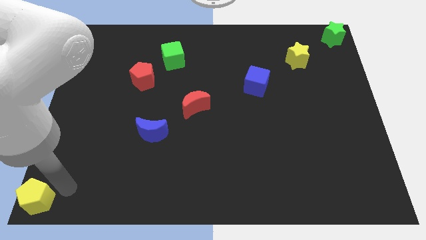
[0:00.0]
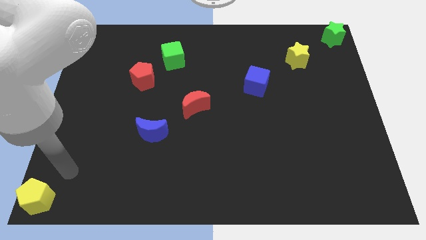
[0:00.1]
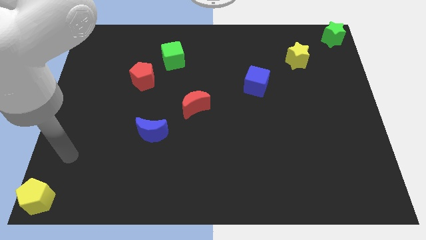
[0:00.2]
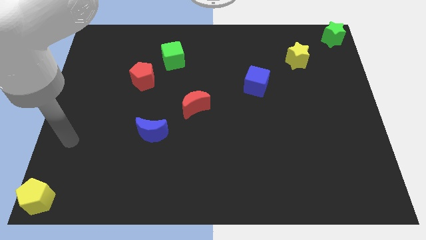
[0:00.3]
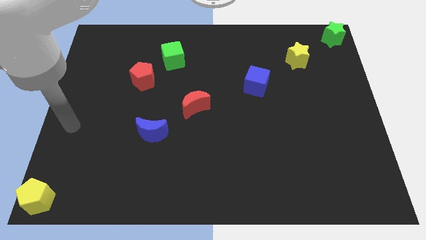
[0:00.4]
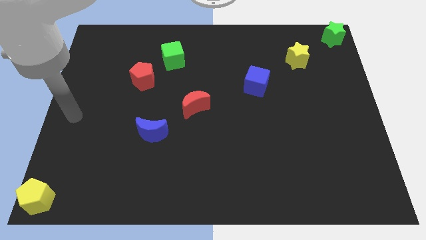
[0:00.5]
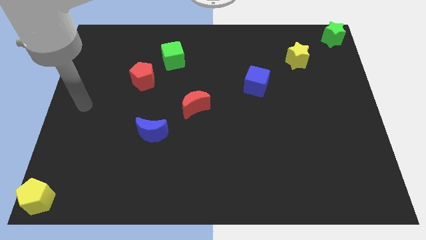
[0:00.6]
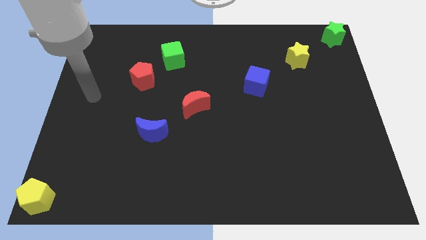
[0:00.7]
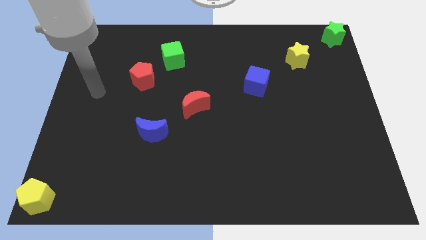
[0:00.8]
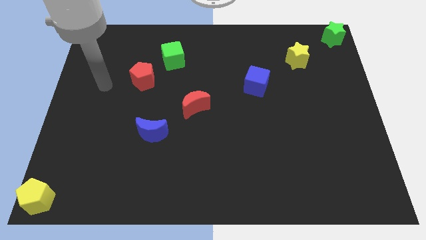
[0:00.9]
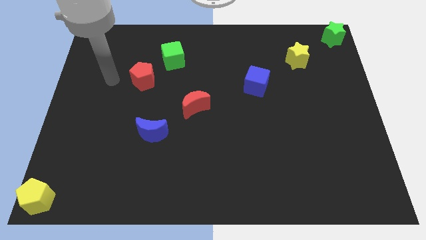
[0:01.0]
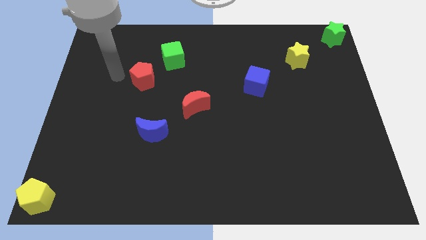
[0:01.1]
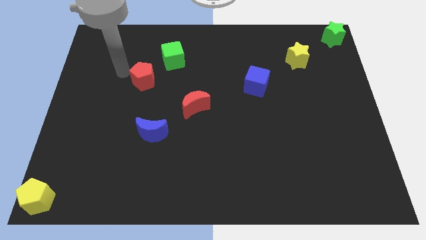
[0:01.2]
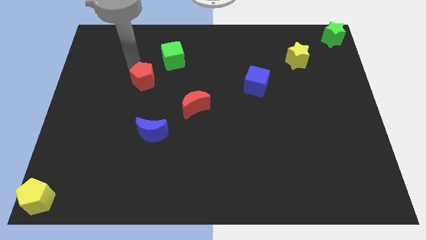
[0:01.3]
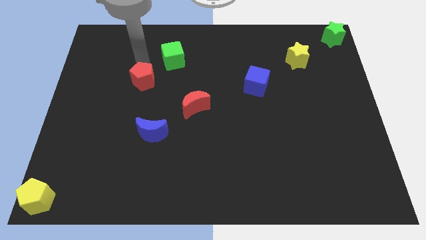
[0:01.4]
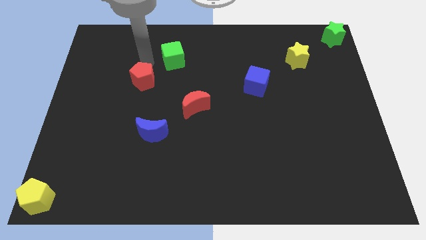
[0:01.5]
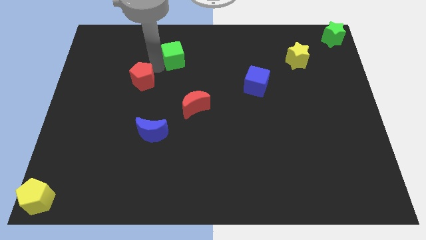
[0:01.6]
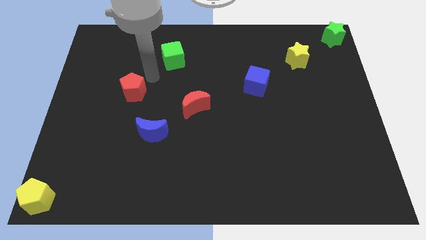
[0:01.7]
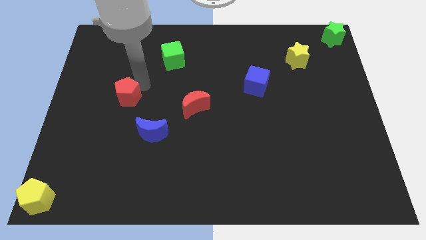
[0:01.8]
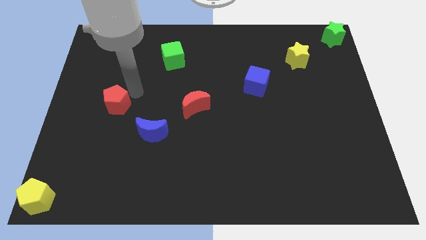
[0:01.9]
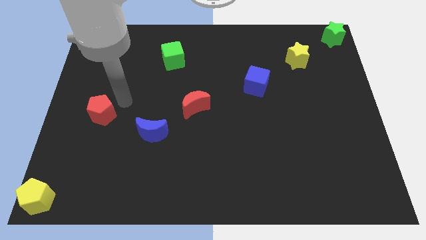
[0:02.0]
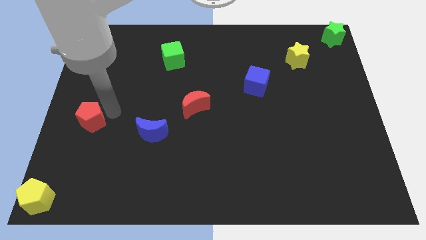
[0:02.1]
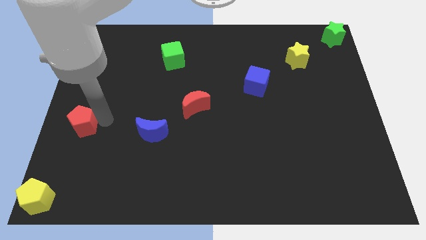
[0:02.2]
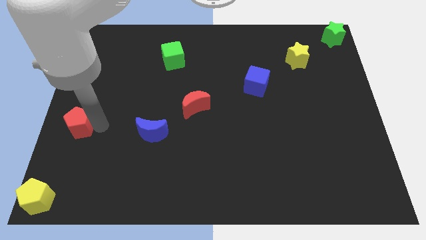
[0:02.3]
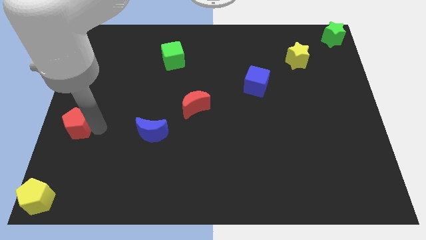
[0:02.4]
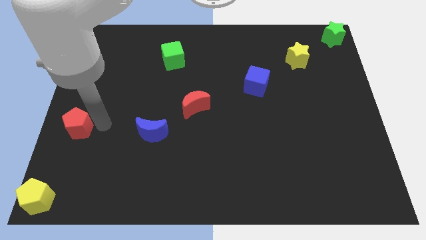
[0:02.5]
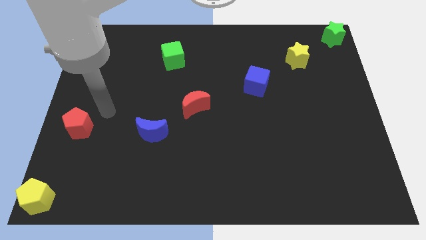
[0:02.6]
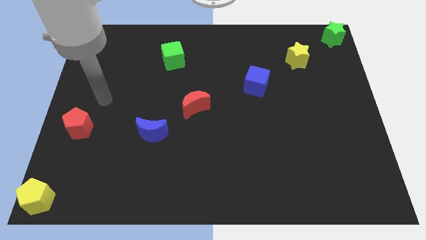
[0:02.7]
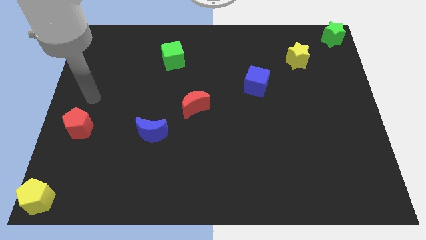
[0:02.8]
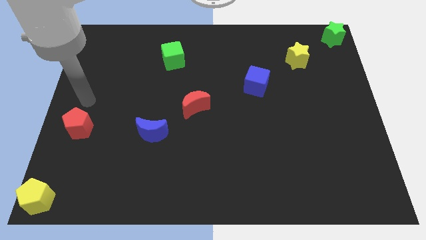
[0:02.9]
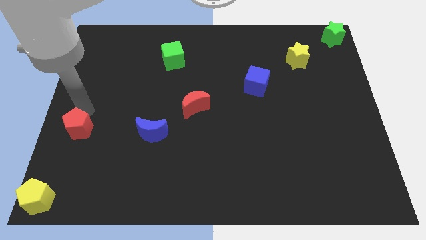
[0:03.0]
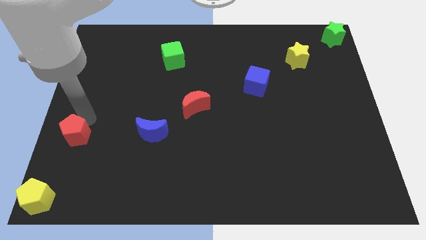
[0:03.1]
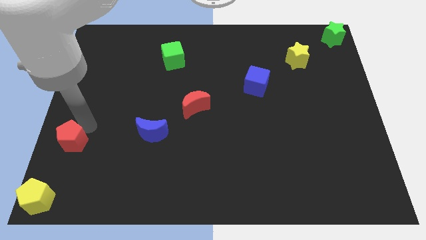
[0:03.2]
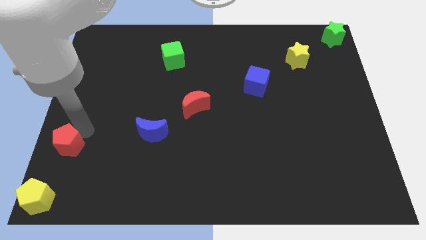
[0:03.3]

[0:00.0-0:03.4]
place the red pentagon diagonally bottom left to the red moon

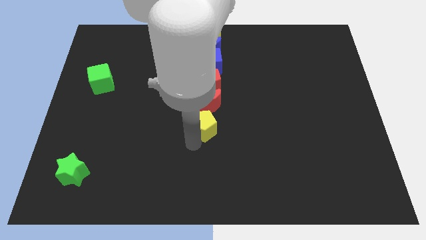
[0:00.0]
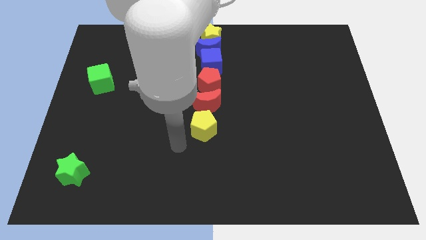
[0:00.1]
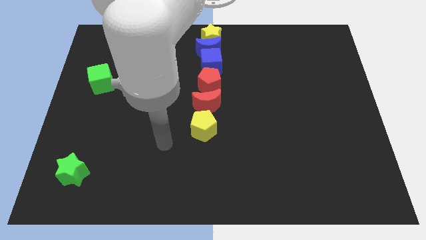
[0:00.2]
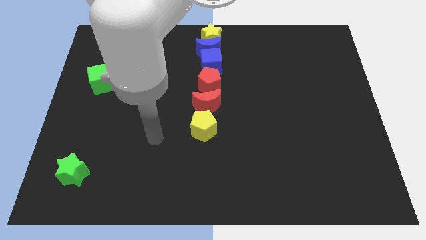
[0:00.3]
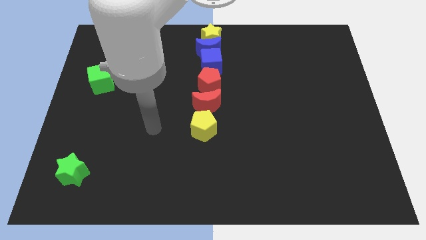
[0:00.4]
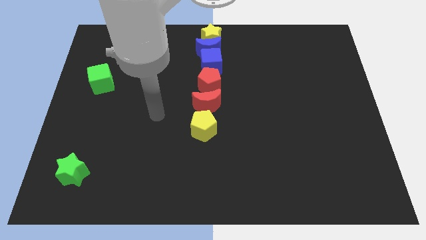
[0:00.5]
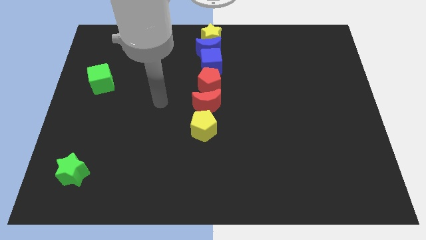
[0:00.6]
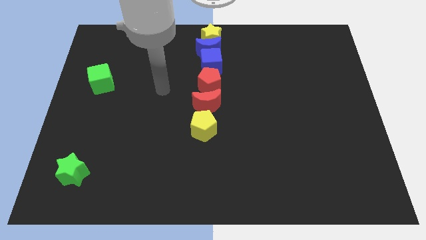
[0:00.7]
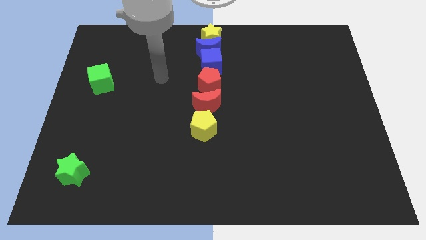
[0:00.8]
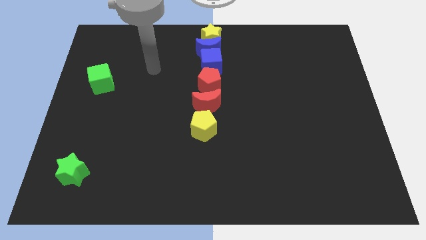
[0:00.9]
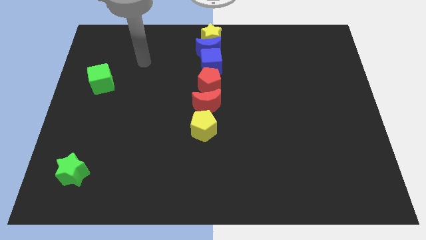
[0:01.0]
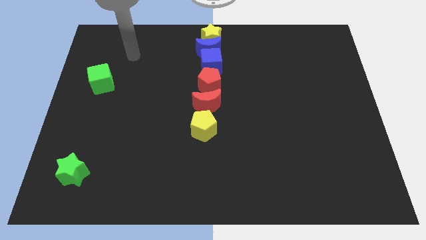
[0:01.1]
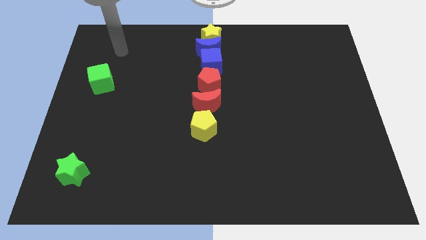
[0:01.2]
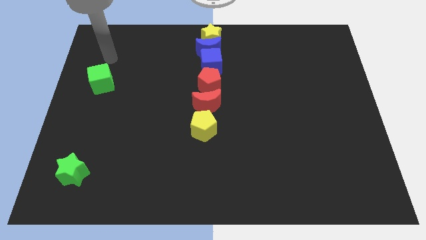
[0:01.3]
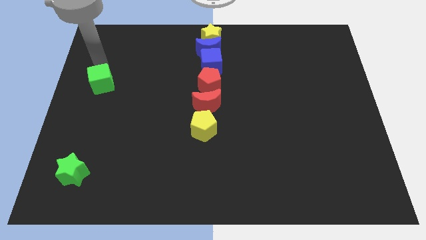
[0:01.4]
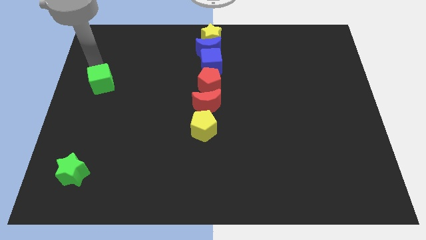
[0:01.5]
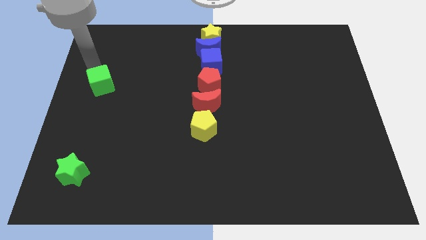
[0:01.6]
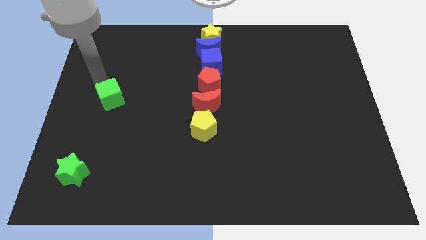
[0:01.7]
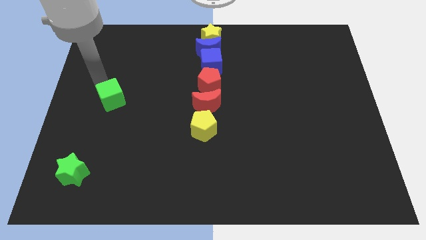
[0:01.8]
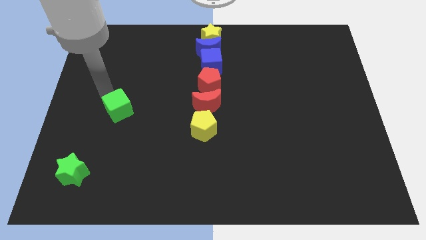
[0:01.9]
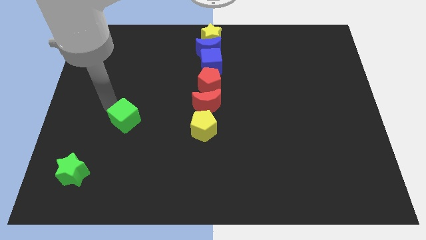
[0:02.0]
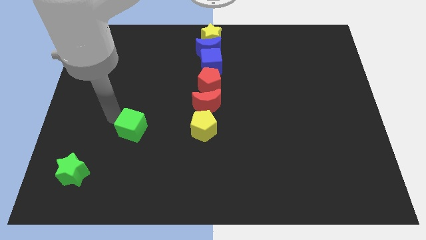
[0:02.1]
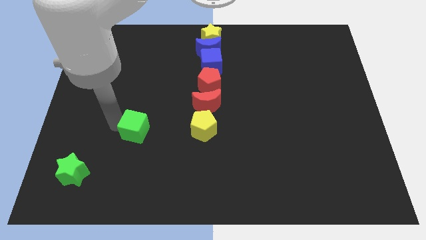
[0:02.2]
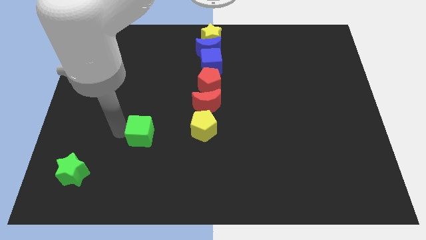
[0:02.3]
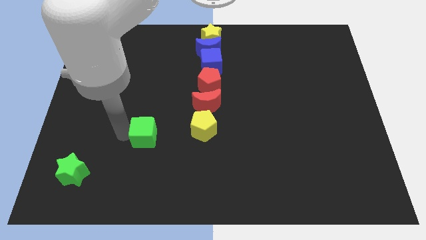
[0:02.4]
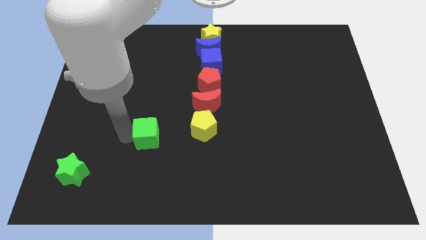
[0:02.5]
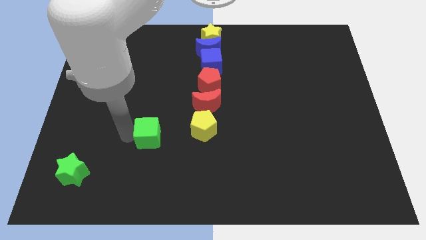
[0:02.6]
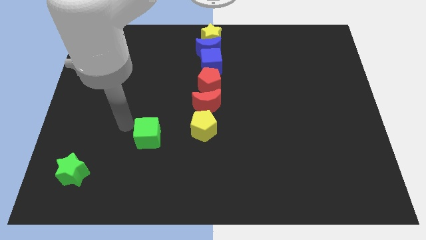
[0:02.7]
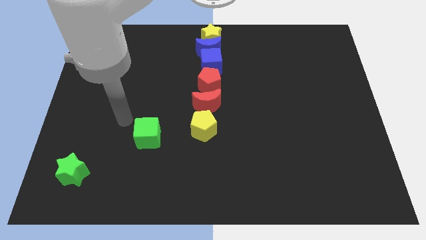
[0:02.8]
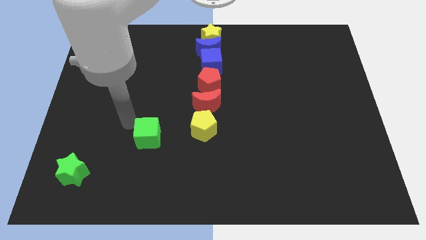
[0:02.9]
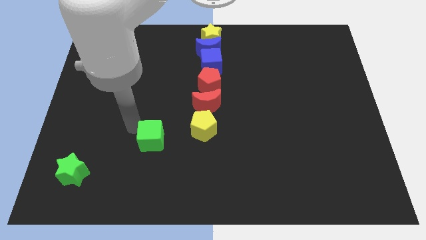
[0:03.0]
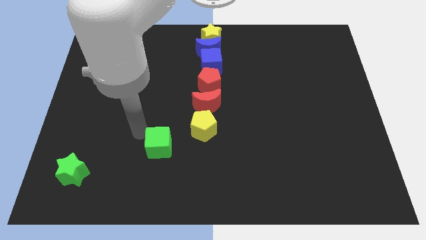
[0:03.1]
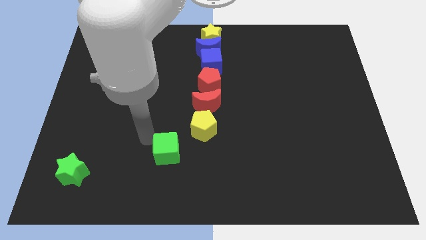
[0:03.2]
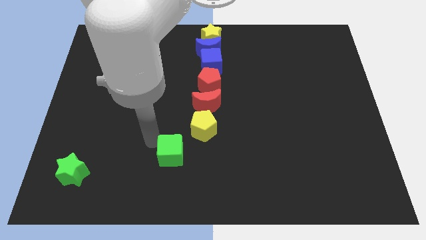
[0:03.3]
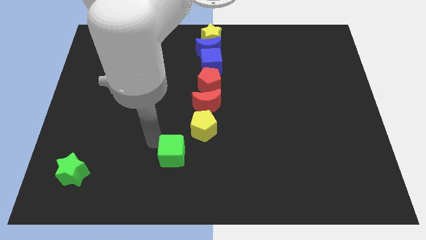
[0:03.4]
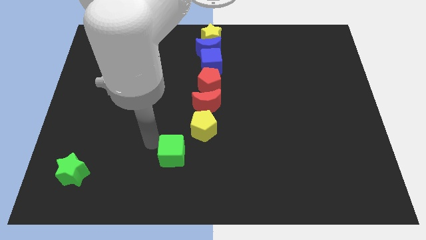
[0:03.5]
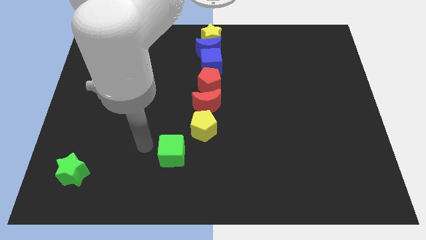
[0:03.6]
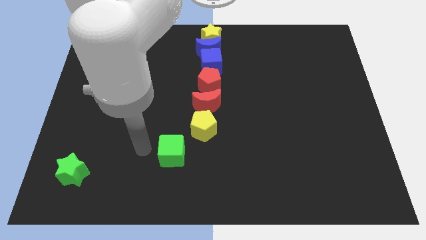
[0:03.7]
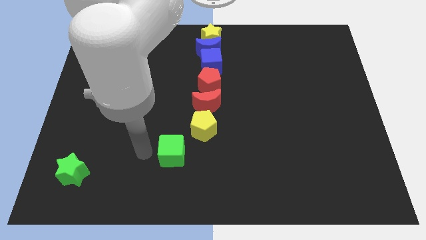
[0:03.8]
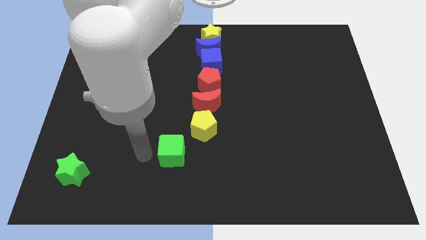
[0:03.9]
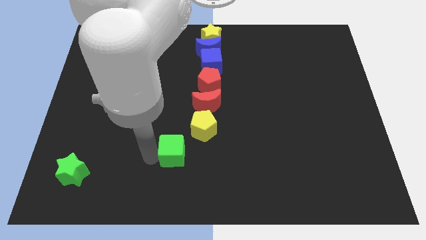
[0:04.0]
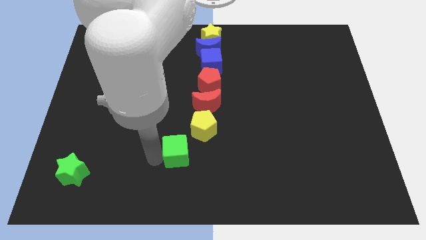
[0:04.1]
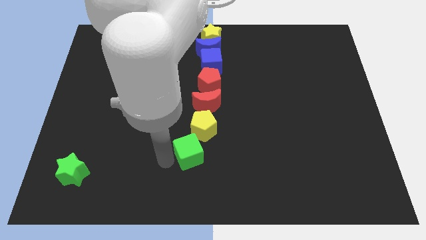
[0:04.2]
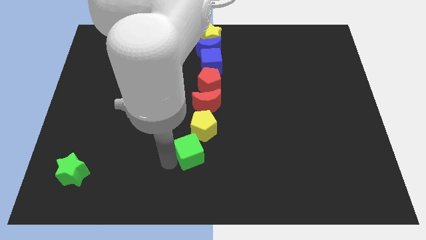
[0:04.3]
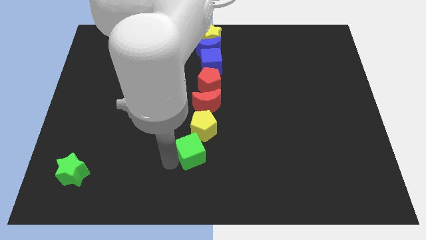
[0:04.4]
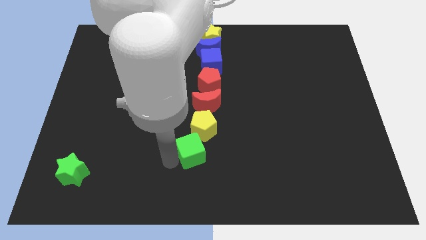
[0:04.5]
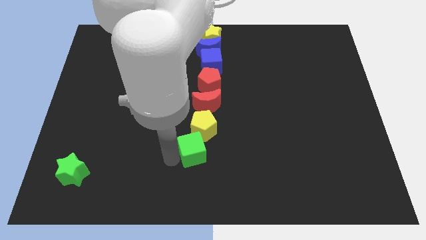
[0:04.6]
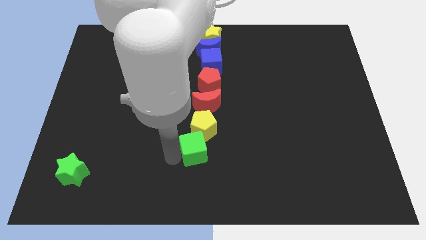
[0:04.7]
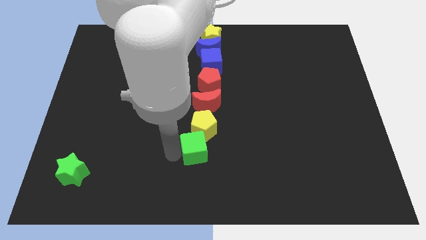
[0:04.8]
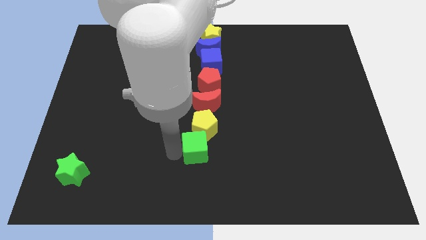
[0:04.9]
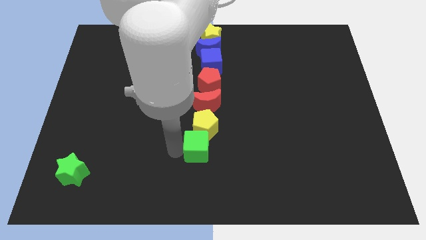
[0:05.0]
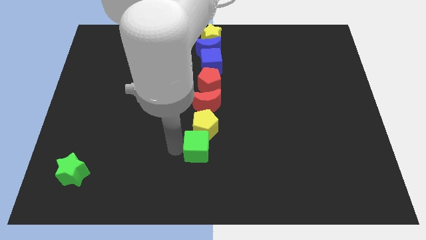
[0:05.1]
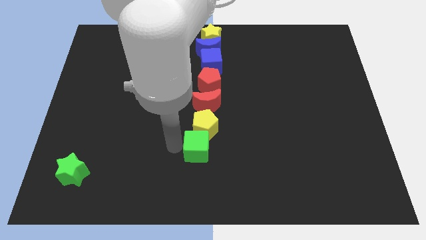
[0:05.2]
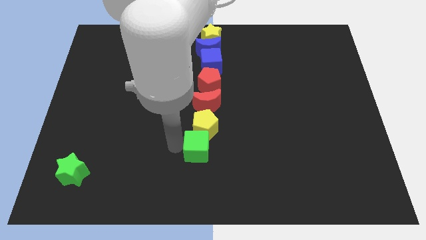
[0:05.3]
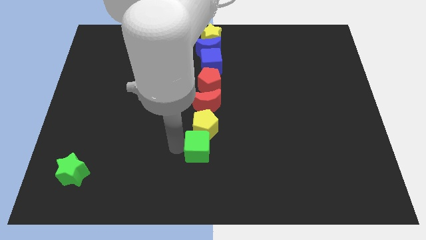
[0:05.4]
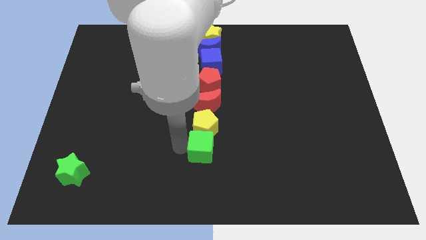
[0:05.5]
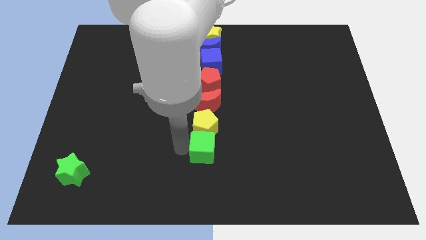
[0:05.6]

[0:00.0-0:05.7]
push green cube into the yellow pentagon
